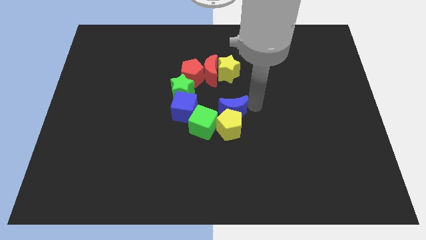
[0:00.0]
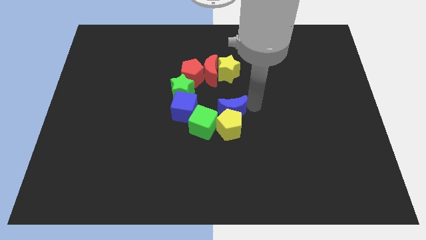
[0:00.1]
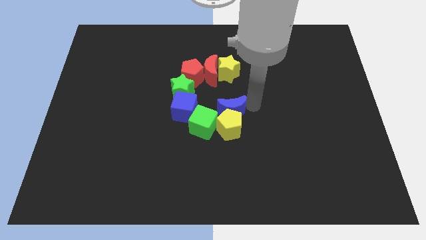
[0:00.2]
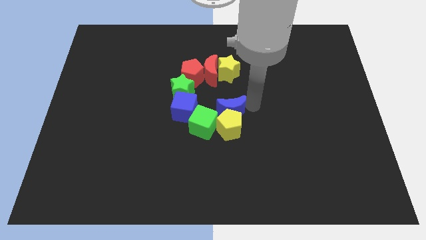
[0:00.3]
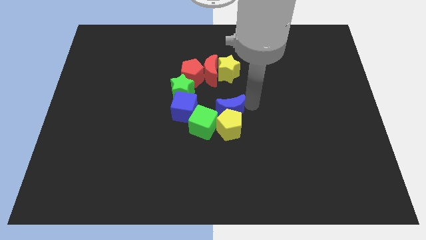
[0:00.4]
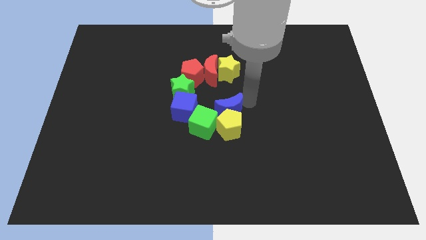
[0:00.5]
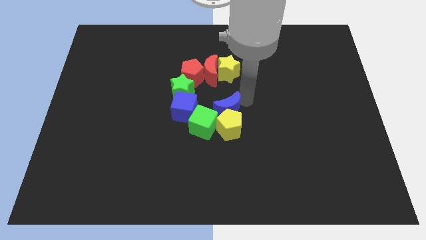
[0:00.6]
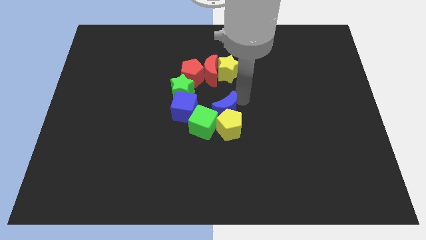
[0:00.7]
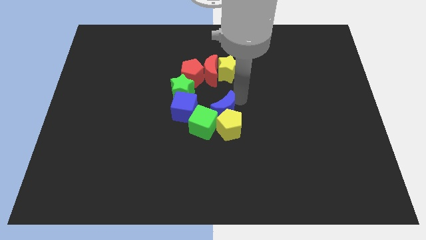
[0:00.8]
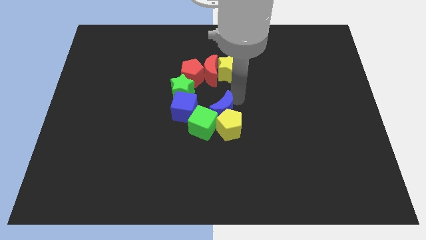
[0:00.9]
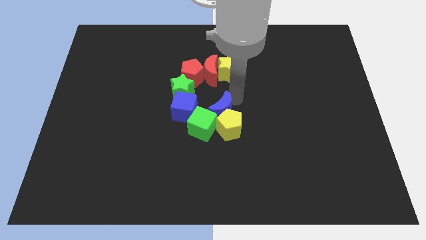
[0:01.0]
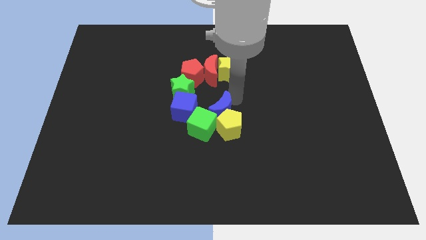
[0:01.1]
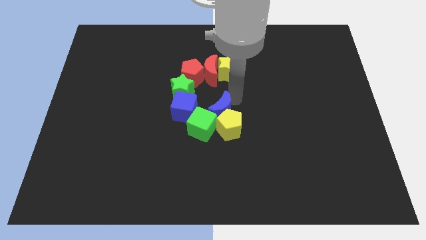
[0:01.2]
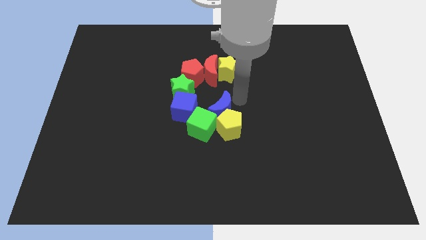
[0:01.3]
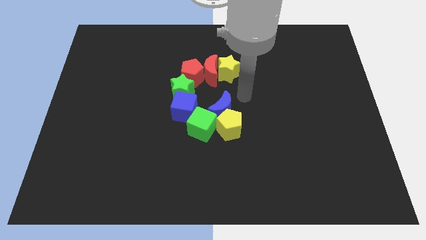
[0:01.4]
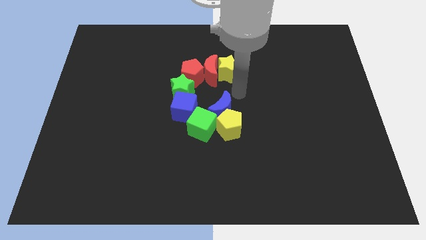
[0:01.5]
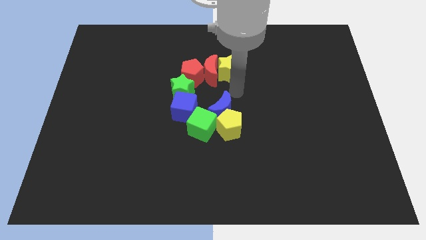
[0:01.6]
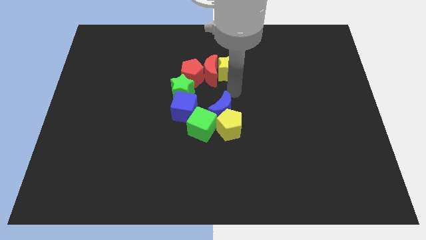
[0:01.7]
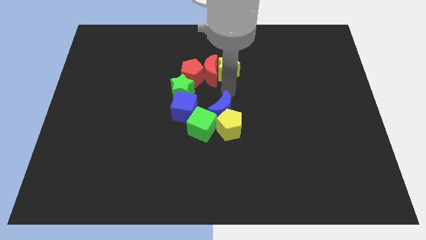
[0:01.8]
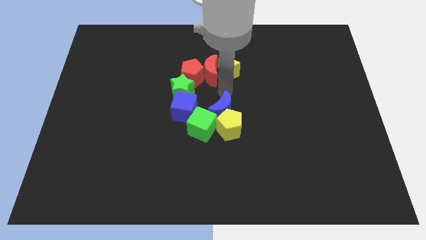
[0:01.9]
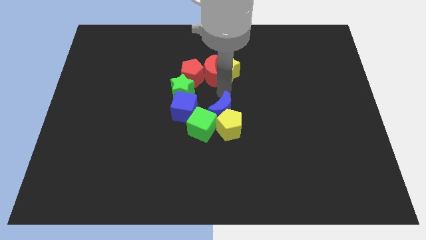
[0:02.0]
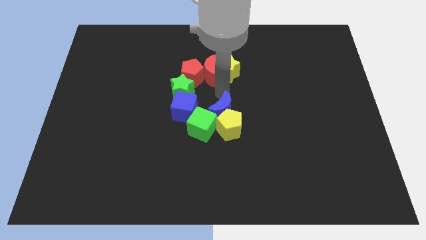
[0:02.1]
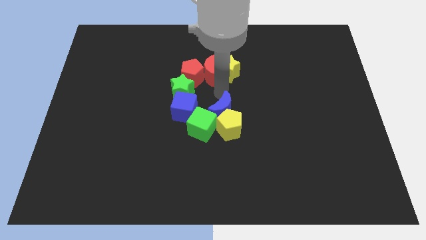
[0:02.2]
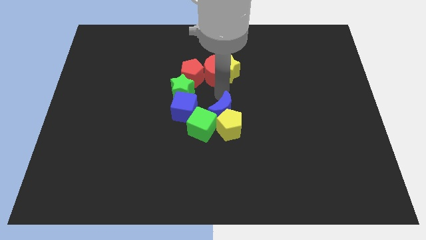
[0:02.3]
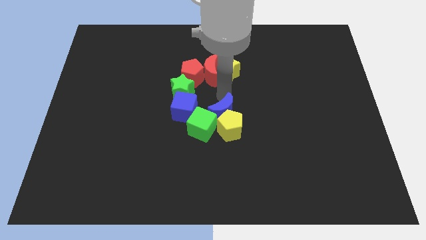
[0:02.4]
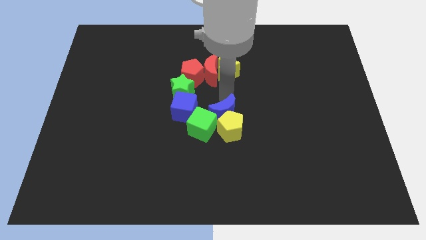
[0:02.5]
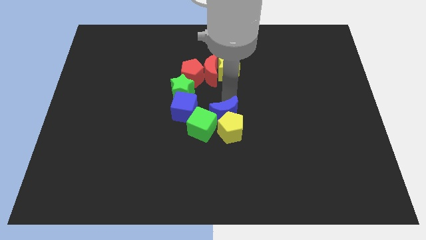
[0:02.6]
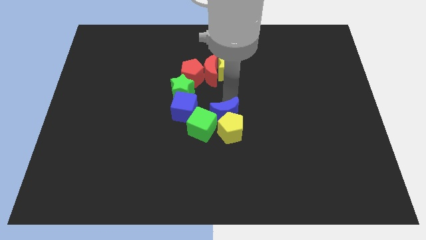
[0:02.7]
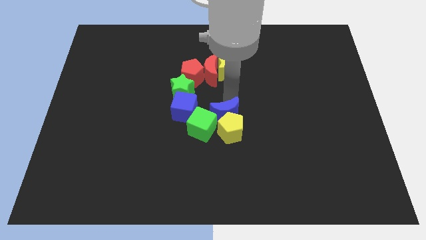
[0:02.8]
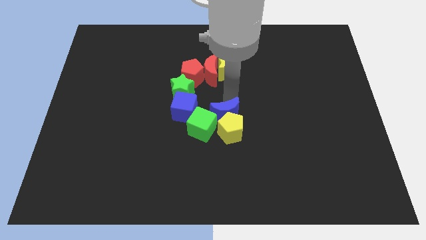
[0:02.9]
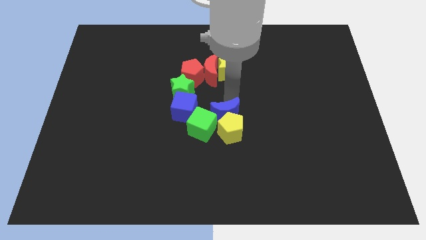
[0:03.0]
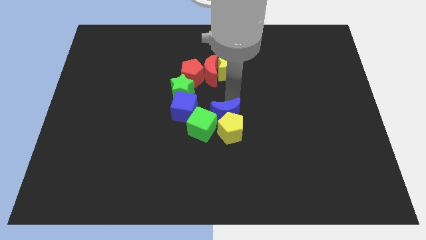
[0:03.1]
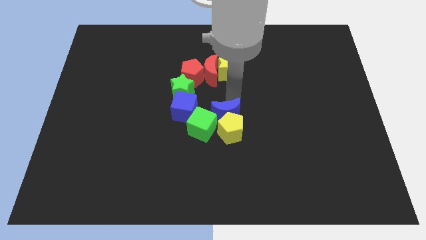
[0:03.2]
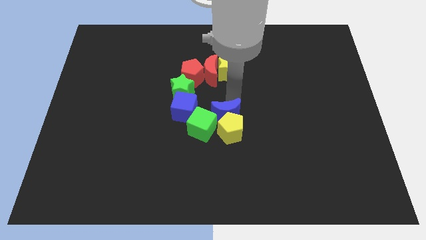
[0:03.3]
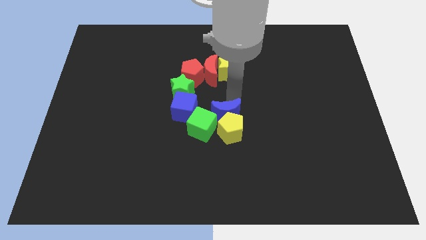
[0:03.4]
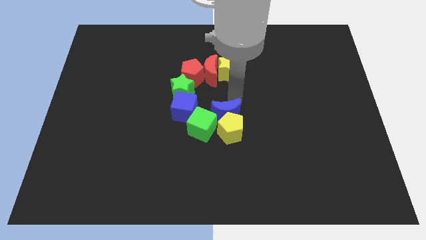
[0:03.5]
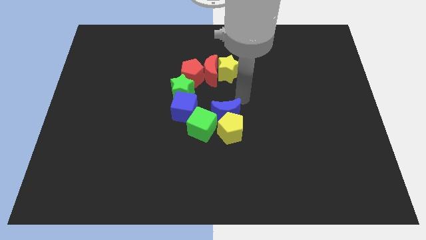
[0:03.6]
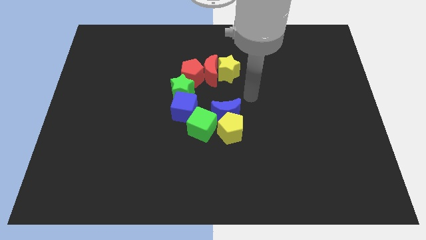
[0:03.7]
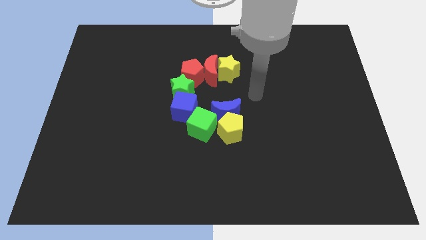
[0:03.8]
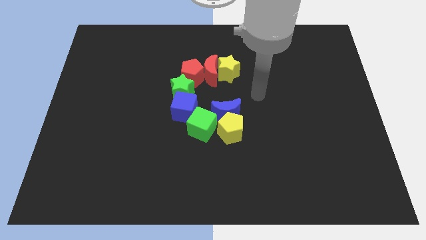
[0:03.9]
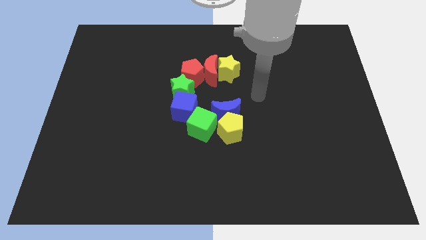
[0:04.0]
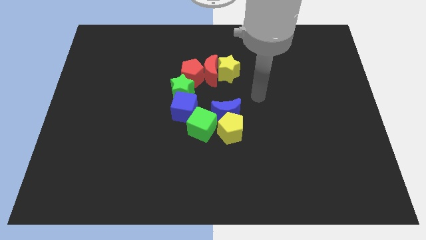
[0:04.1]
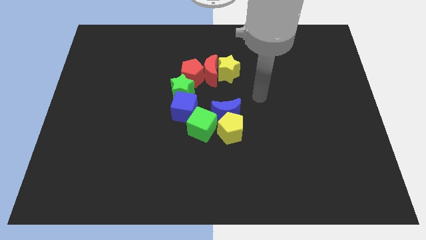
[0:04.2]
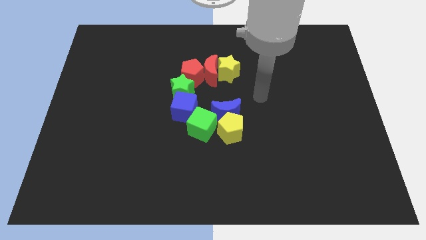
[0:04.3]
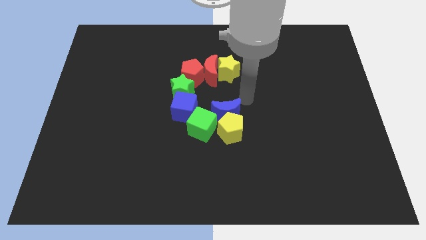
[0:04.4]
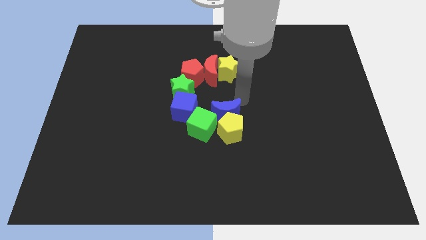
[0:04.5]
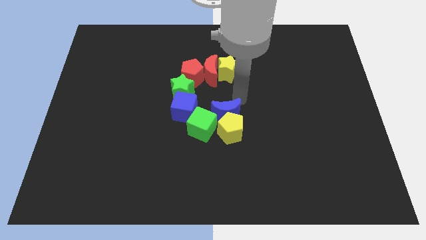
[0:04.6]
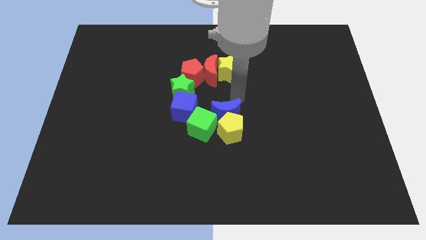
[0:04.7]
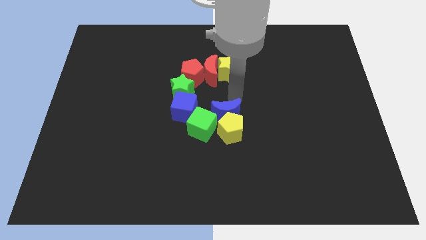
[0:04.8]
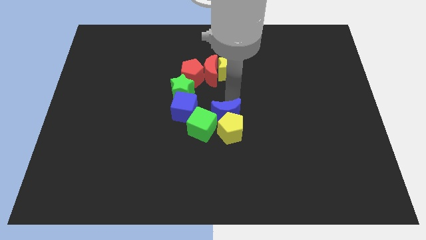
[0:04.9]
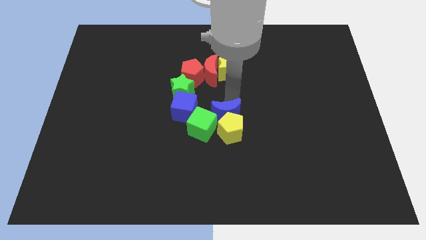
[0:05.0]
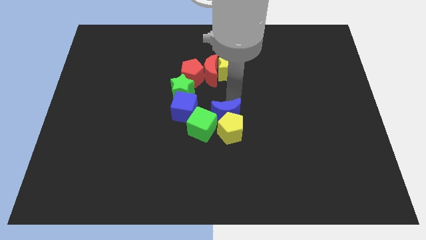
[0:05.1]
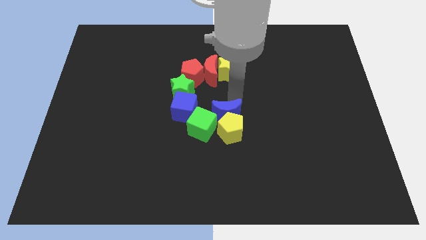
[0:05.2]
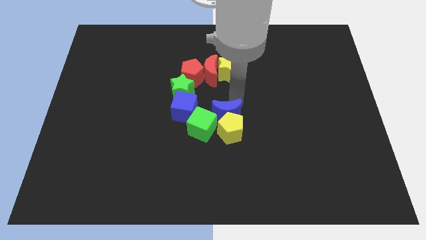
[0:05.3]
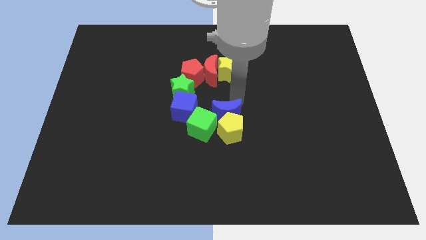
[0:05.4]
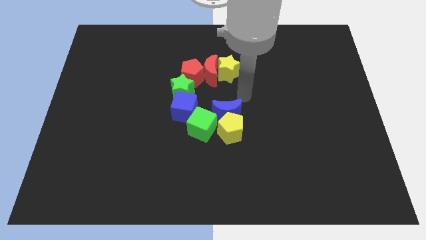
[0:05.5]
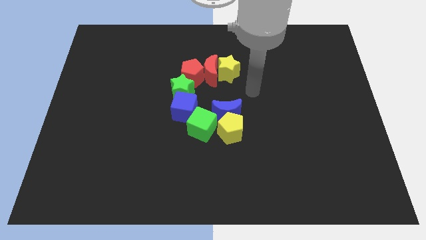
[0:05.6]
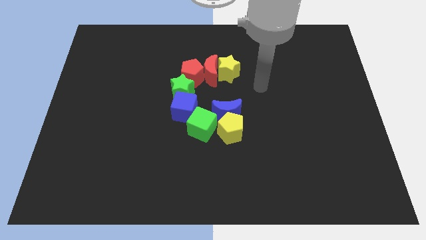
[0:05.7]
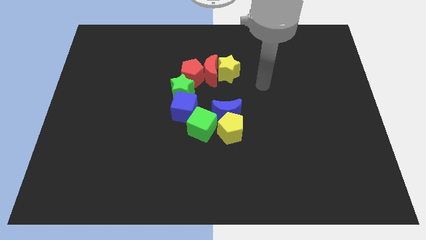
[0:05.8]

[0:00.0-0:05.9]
push the blue crescent to the group of blocks

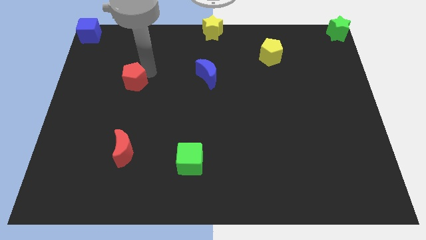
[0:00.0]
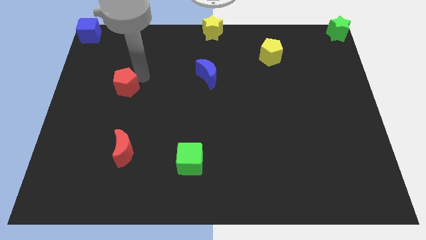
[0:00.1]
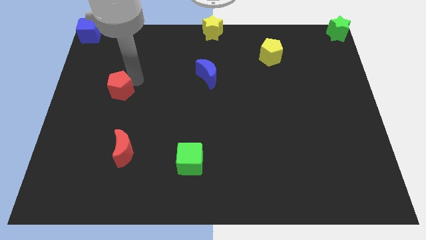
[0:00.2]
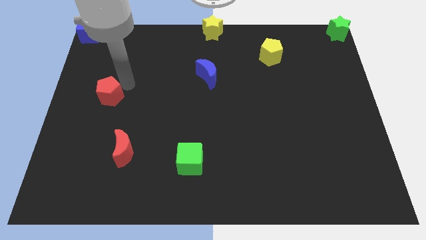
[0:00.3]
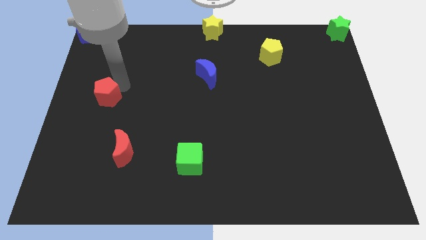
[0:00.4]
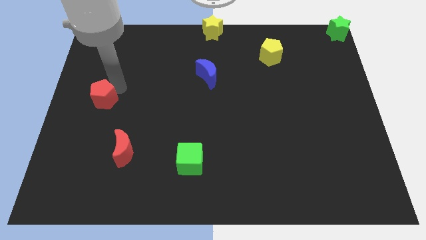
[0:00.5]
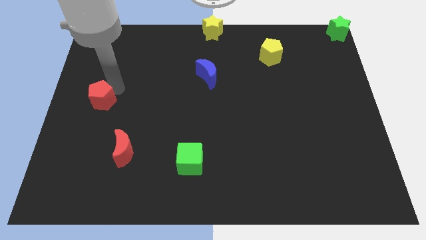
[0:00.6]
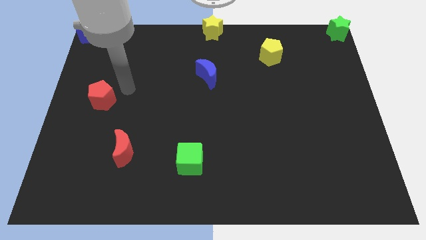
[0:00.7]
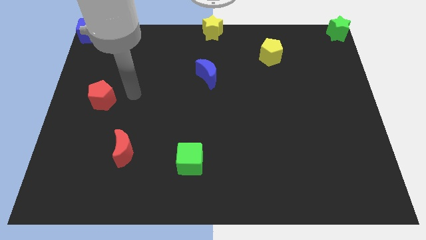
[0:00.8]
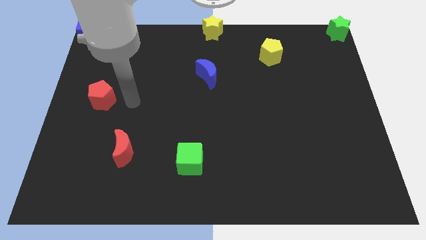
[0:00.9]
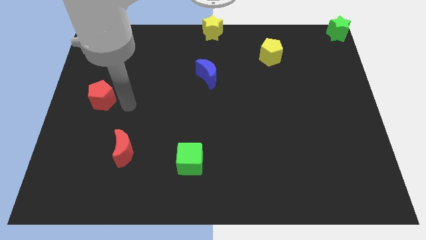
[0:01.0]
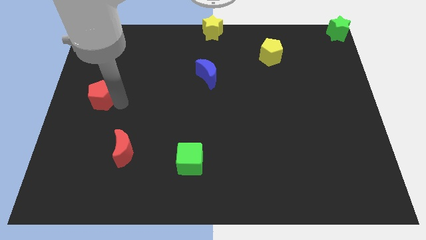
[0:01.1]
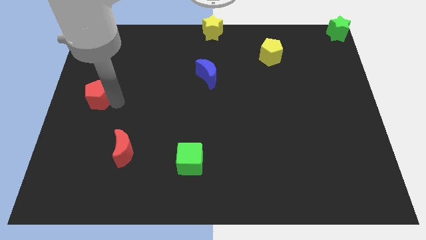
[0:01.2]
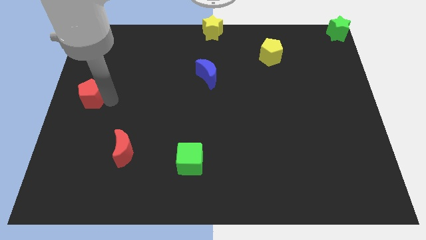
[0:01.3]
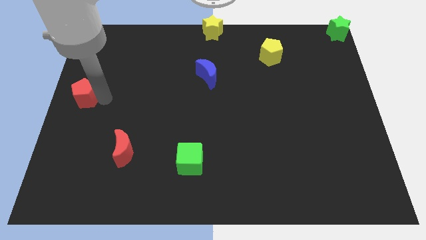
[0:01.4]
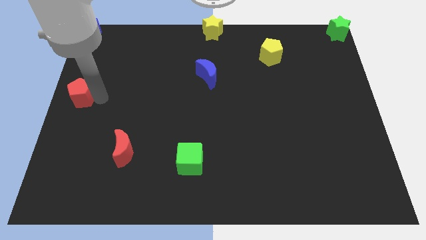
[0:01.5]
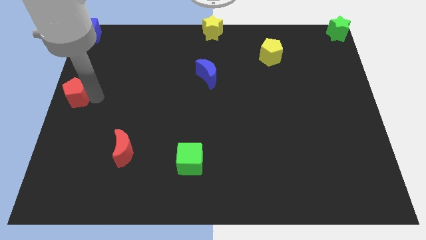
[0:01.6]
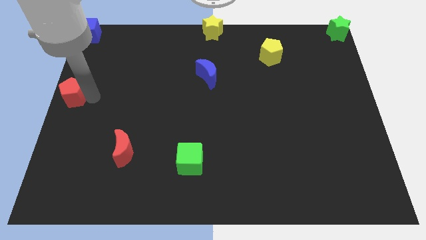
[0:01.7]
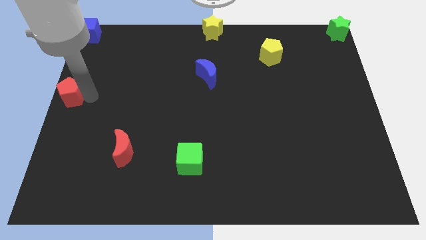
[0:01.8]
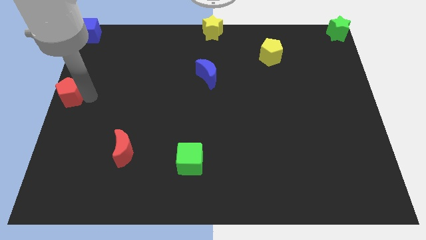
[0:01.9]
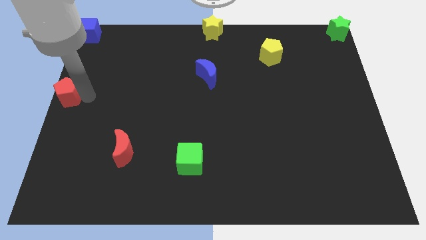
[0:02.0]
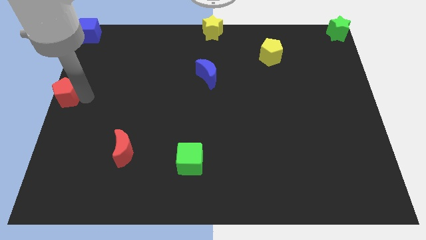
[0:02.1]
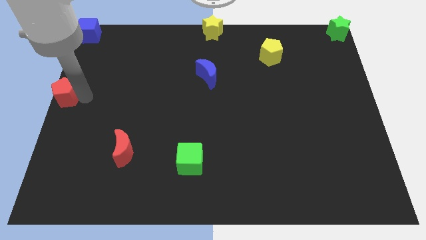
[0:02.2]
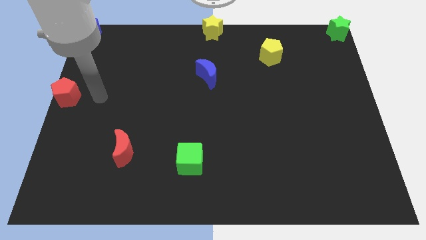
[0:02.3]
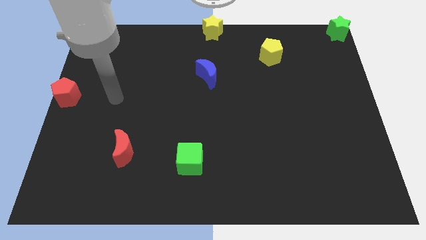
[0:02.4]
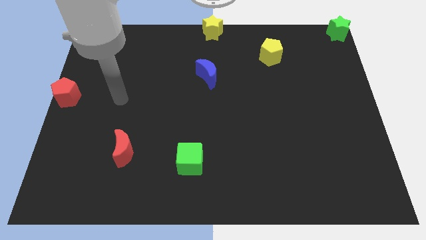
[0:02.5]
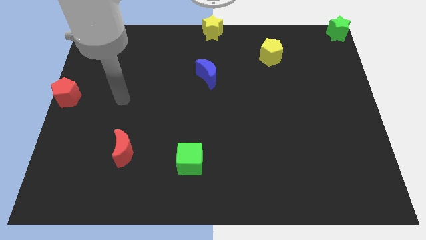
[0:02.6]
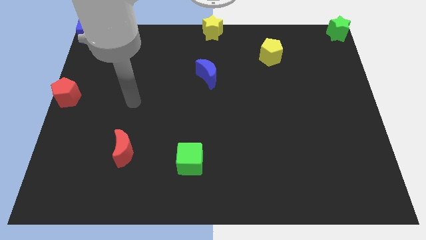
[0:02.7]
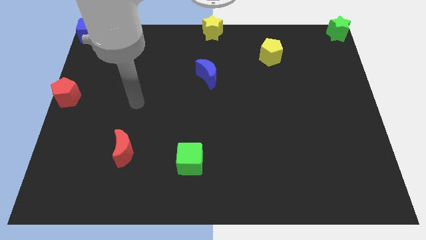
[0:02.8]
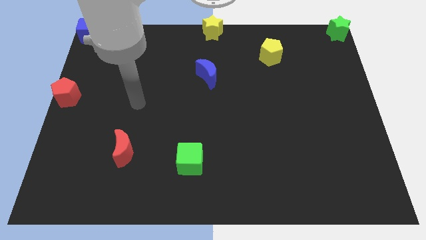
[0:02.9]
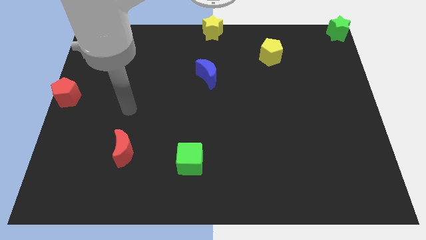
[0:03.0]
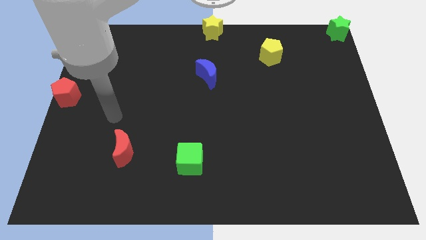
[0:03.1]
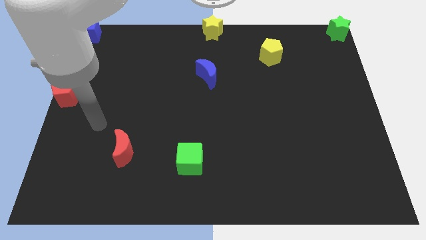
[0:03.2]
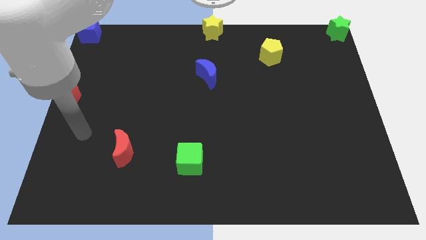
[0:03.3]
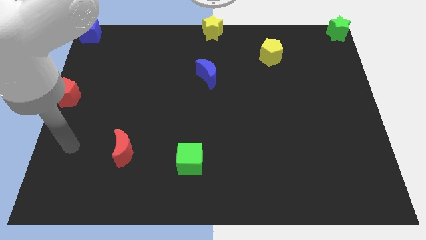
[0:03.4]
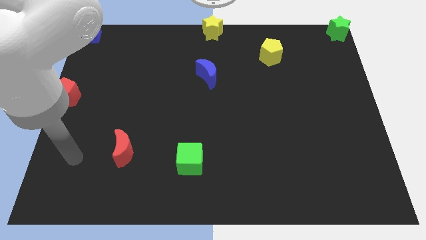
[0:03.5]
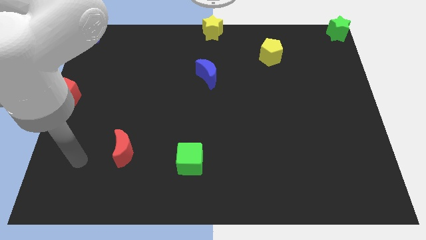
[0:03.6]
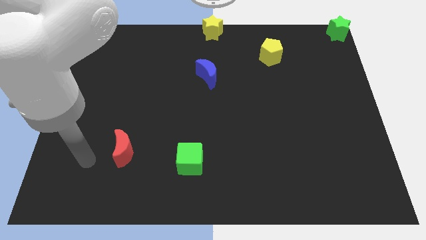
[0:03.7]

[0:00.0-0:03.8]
place red pentagon at left center of the board
